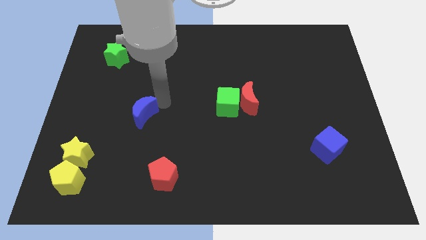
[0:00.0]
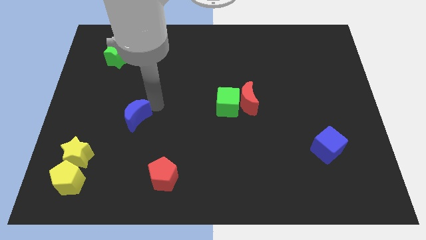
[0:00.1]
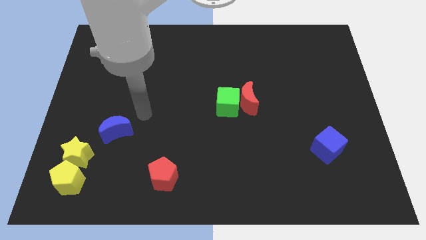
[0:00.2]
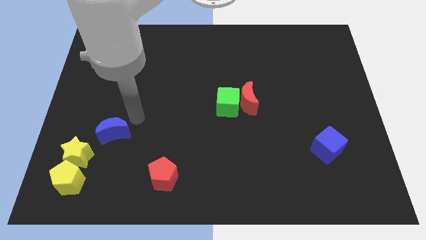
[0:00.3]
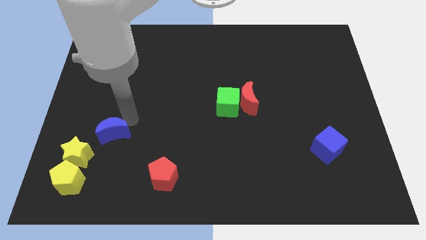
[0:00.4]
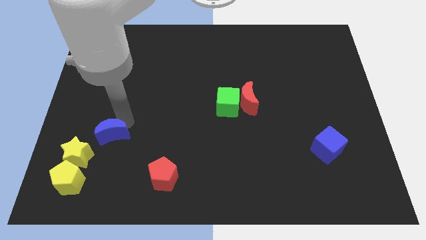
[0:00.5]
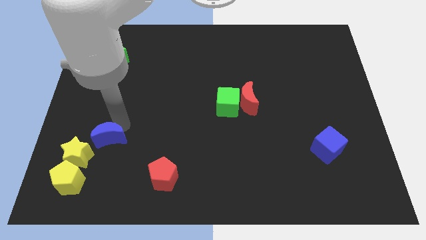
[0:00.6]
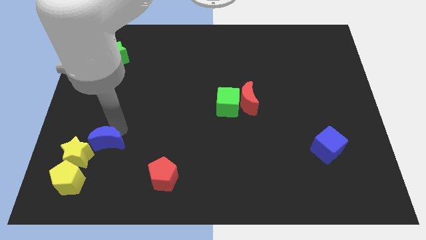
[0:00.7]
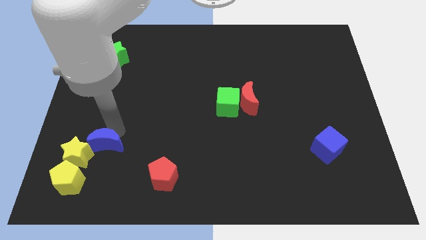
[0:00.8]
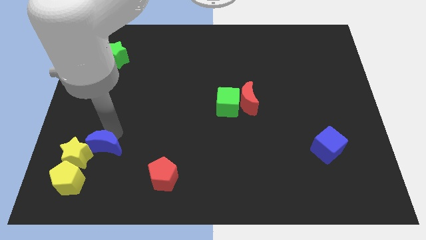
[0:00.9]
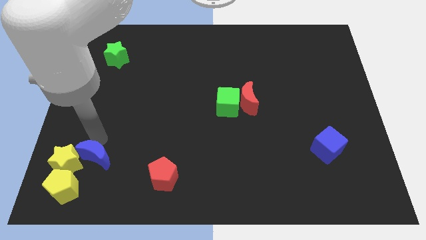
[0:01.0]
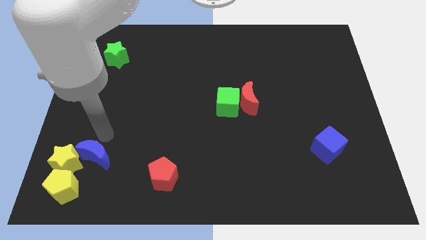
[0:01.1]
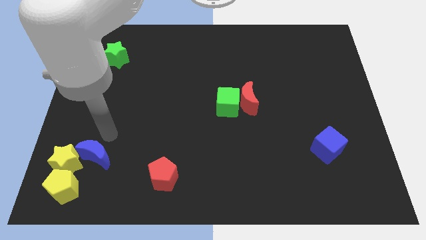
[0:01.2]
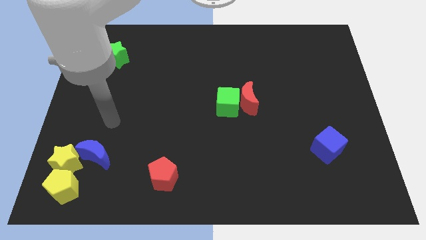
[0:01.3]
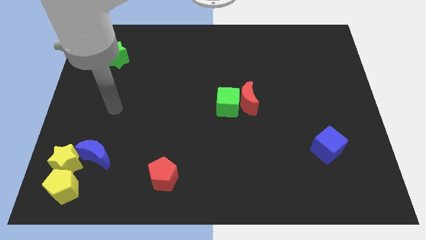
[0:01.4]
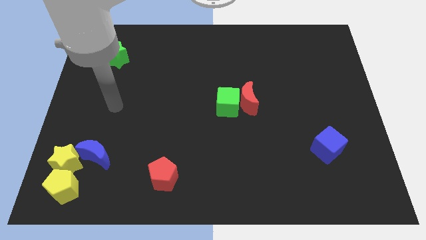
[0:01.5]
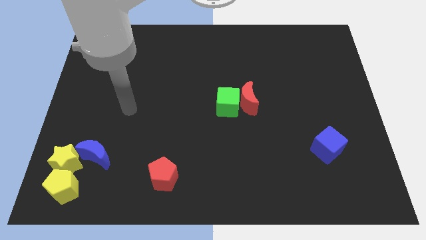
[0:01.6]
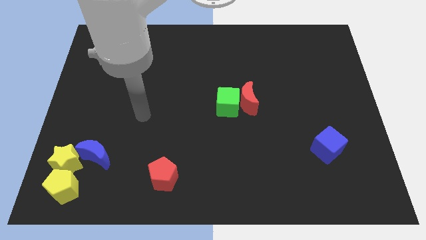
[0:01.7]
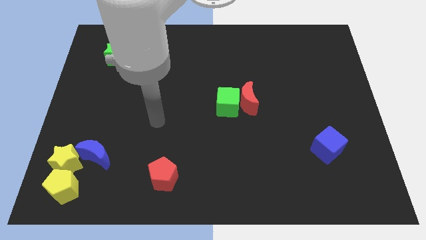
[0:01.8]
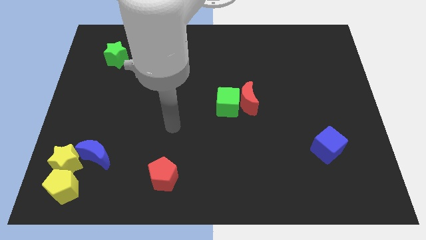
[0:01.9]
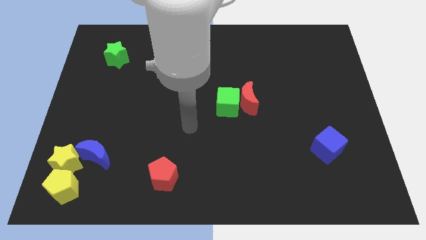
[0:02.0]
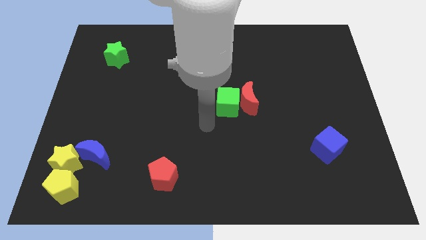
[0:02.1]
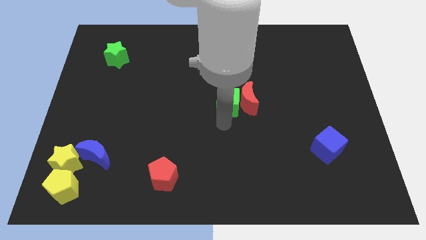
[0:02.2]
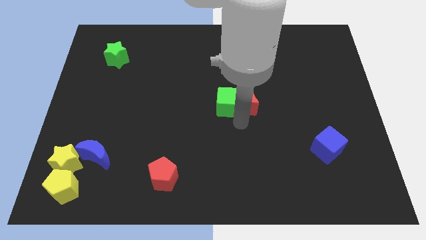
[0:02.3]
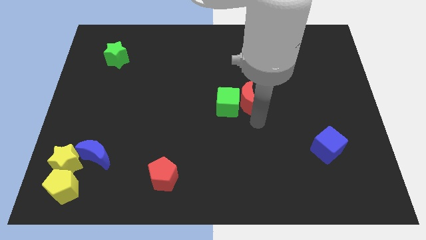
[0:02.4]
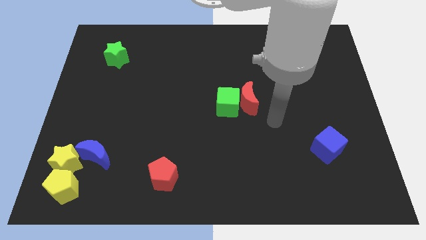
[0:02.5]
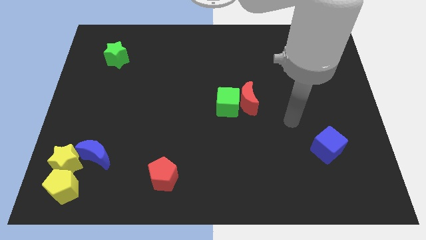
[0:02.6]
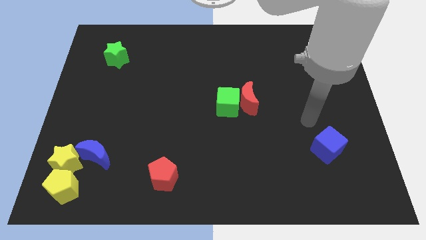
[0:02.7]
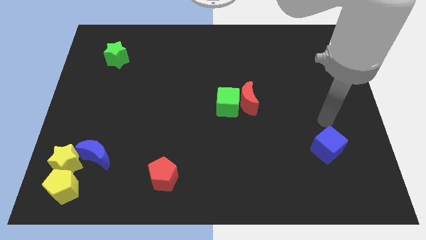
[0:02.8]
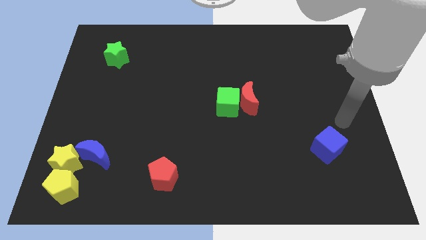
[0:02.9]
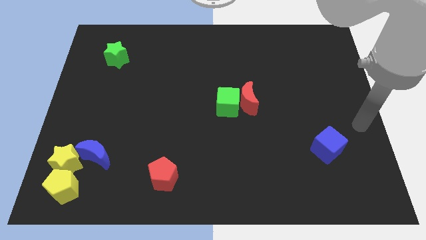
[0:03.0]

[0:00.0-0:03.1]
push the blue moon into the yellow star

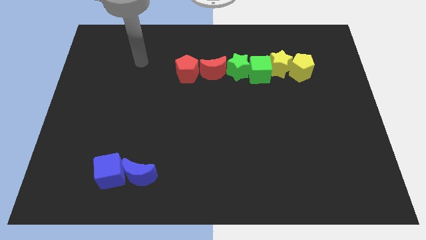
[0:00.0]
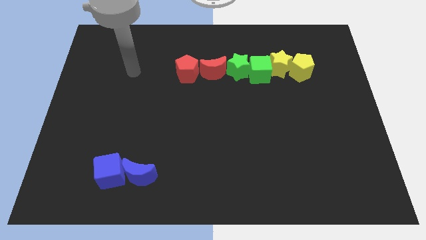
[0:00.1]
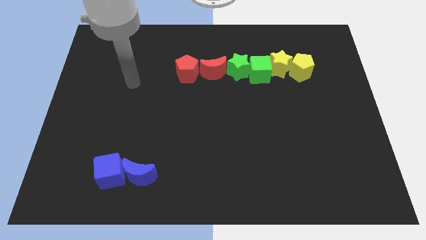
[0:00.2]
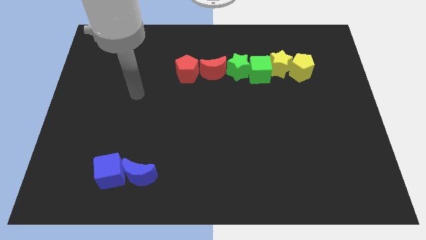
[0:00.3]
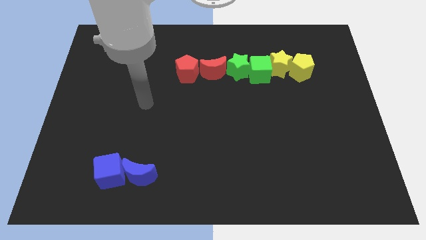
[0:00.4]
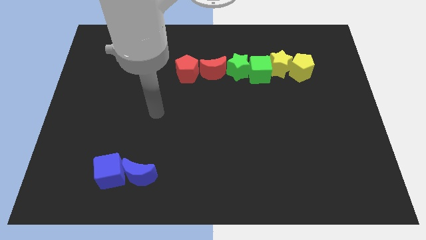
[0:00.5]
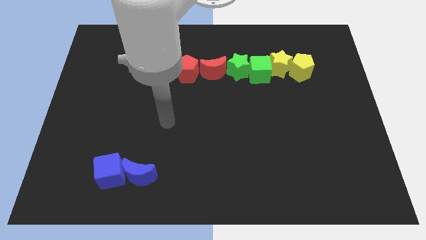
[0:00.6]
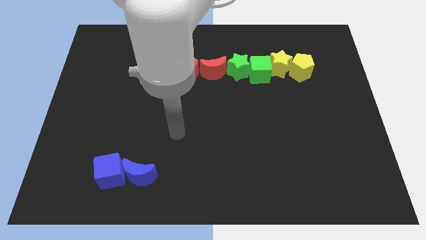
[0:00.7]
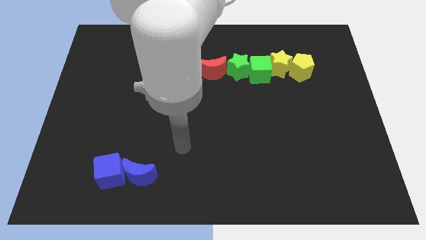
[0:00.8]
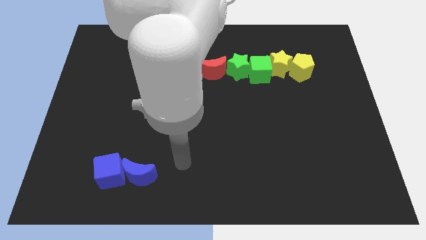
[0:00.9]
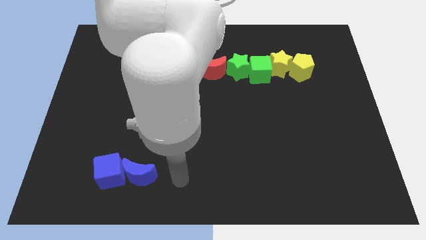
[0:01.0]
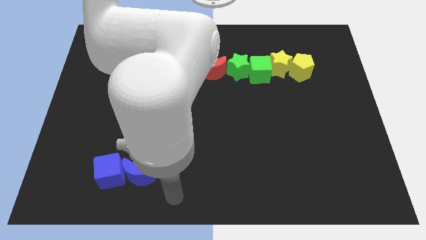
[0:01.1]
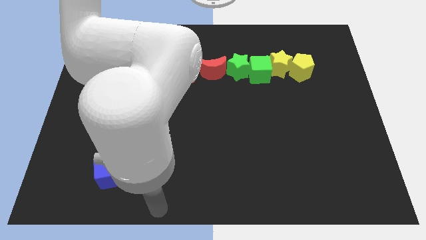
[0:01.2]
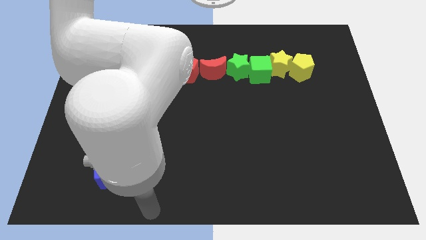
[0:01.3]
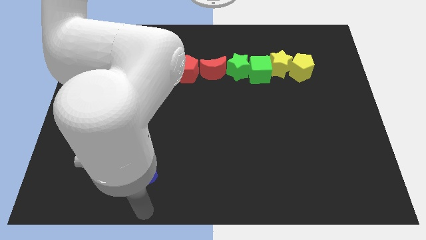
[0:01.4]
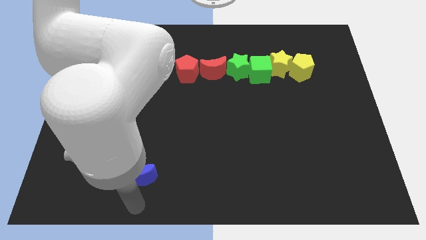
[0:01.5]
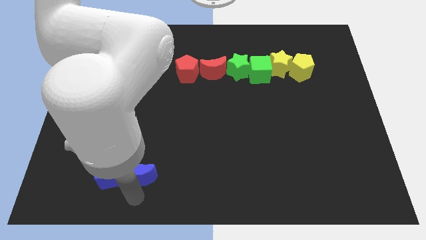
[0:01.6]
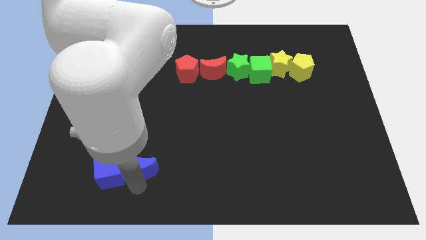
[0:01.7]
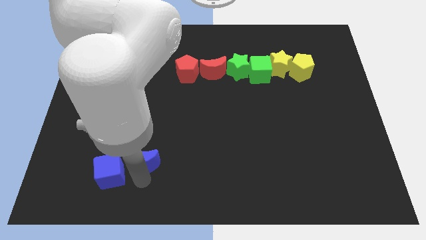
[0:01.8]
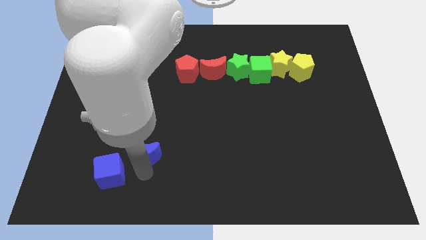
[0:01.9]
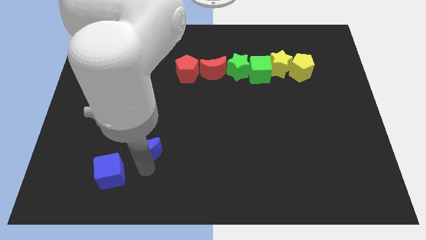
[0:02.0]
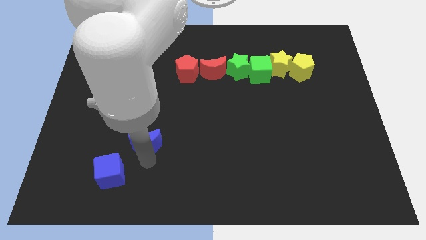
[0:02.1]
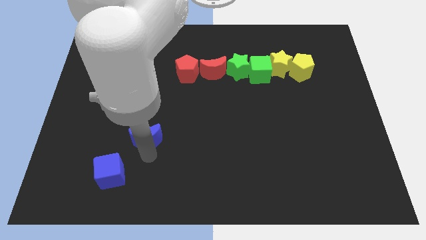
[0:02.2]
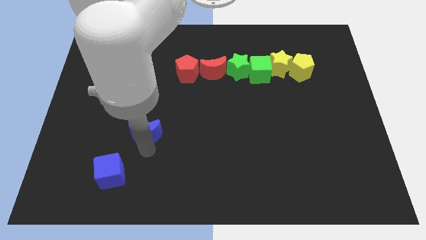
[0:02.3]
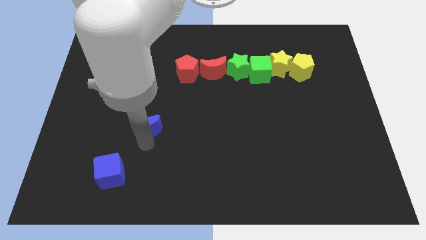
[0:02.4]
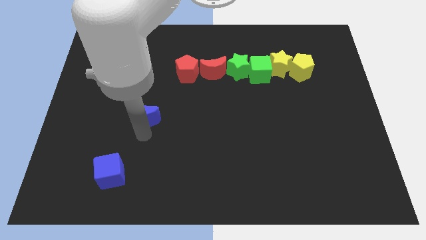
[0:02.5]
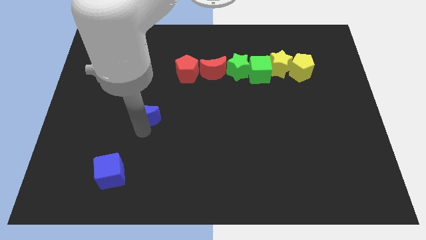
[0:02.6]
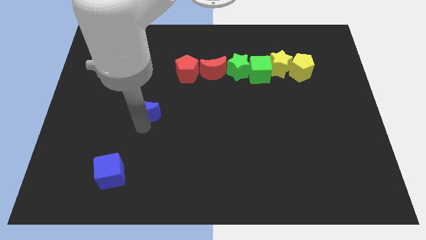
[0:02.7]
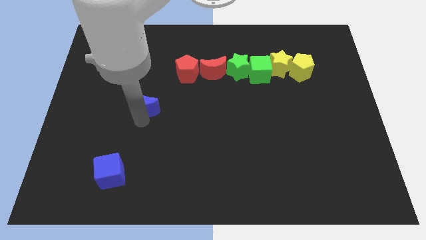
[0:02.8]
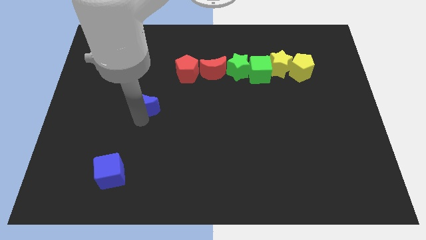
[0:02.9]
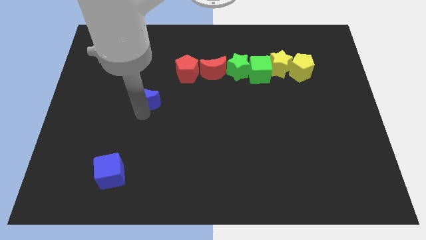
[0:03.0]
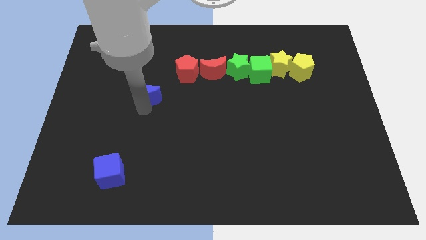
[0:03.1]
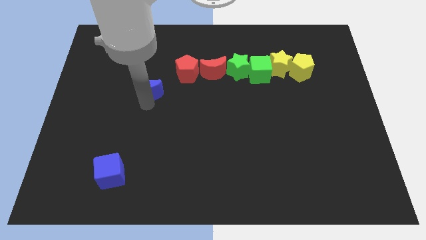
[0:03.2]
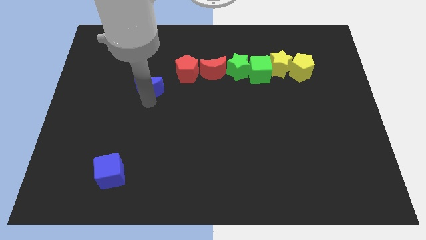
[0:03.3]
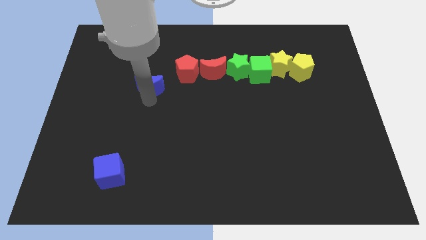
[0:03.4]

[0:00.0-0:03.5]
move the blue crescent away from the right side of the blue cube

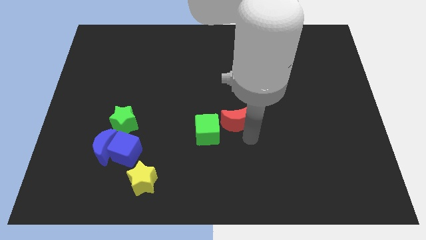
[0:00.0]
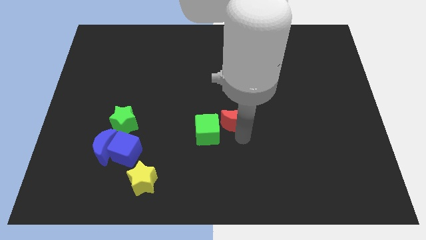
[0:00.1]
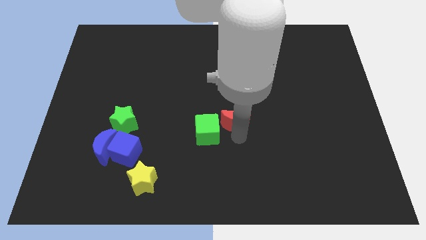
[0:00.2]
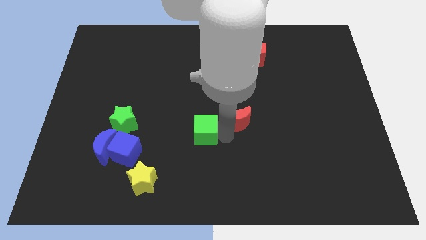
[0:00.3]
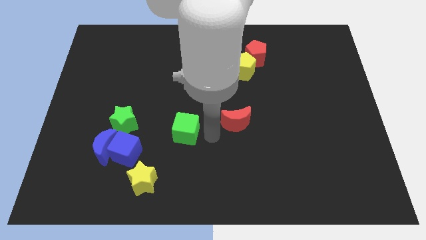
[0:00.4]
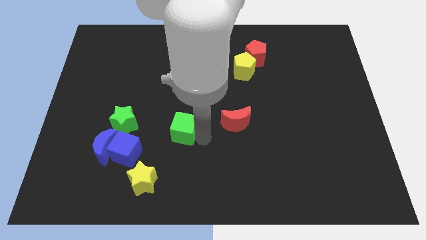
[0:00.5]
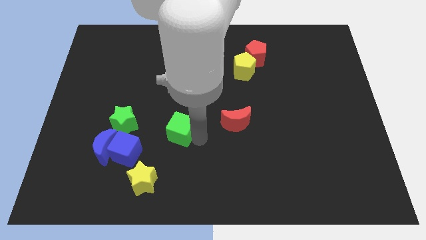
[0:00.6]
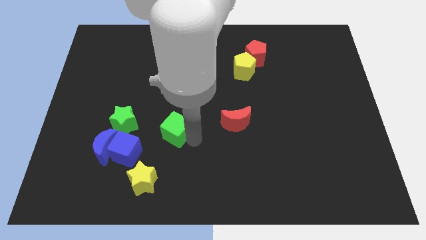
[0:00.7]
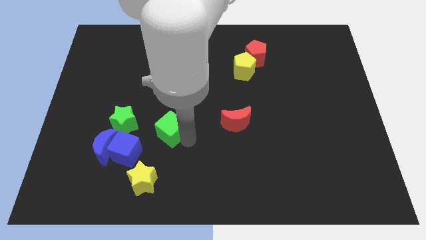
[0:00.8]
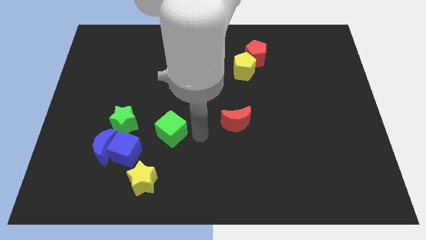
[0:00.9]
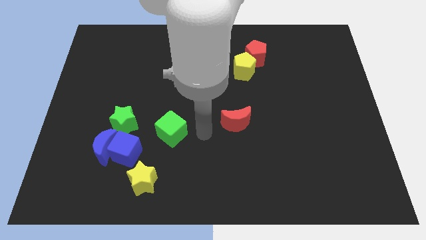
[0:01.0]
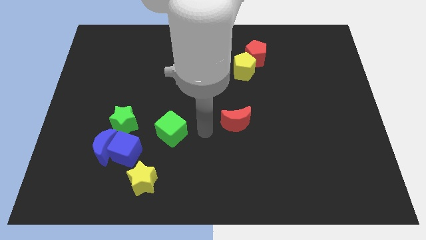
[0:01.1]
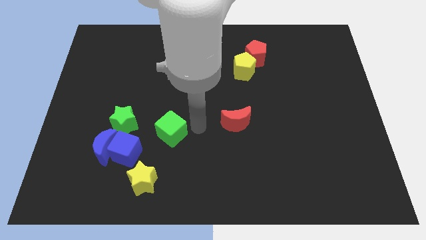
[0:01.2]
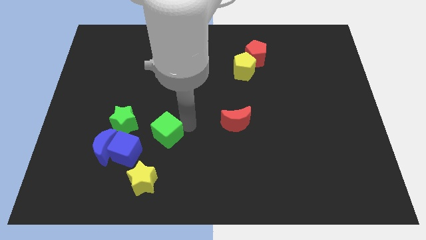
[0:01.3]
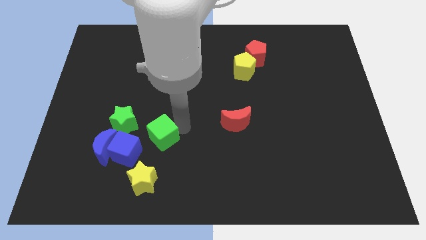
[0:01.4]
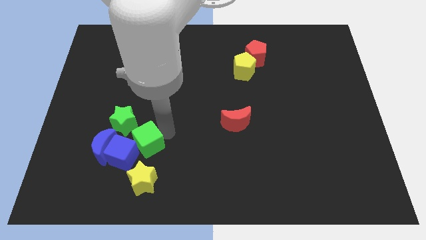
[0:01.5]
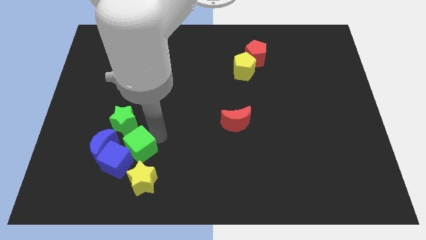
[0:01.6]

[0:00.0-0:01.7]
put the green cube into the blue cube

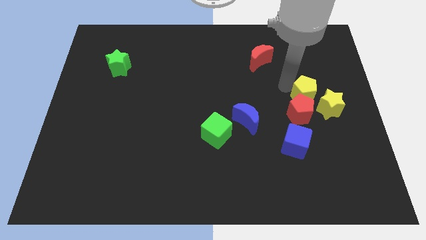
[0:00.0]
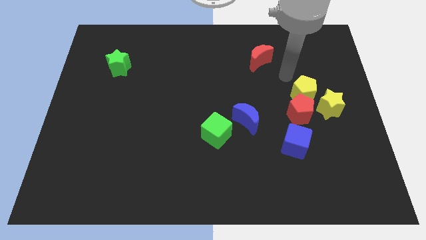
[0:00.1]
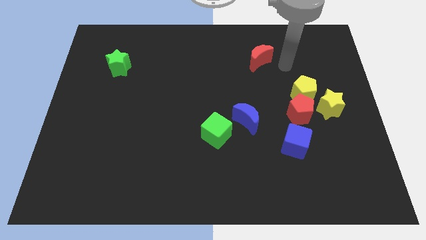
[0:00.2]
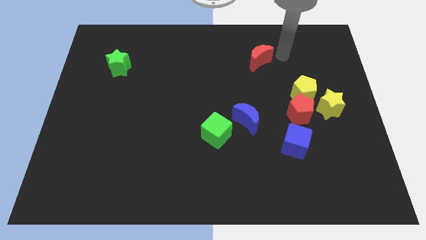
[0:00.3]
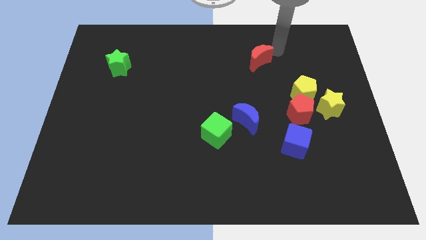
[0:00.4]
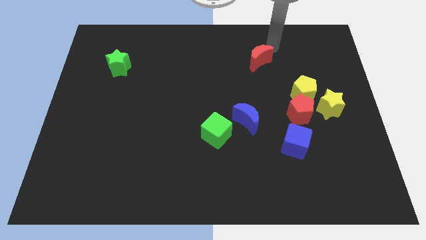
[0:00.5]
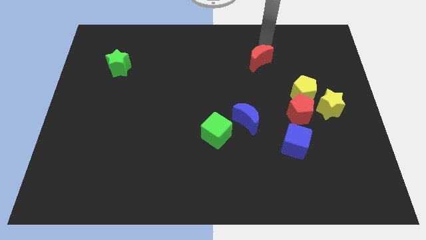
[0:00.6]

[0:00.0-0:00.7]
move your arm away from yellow pentagon
